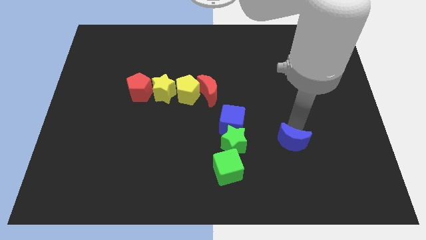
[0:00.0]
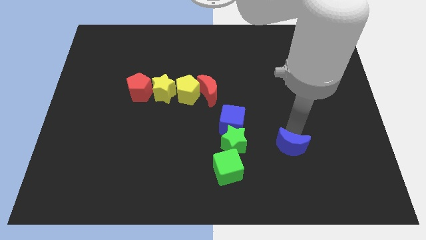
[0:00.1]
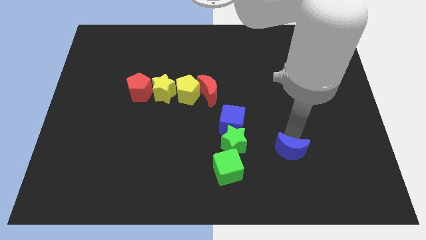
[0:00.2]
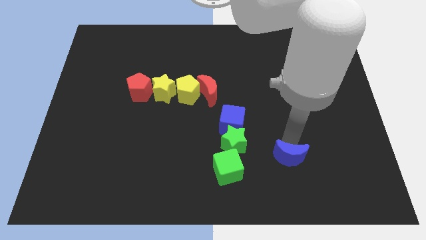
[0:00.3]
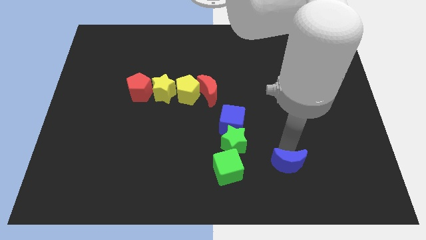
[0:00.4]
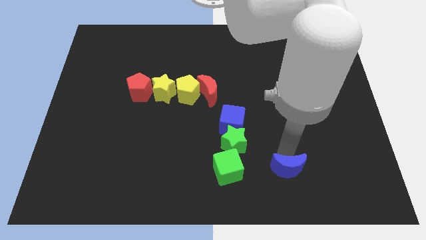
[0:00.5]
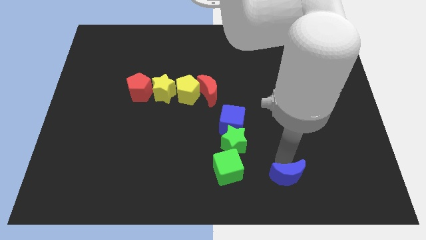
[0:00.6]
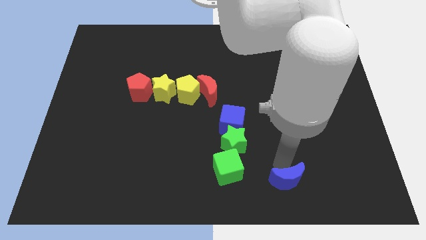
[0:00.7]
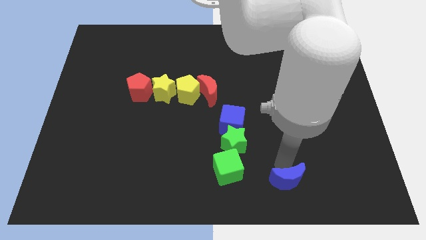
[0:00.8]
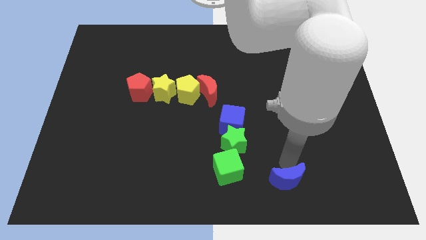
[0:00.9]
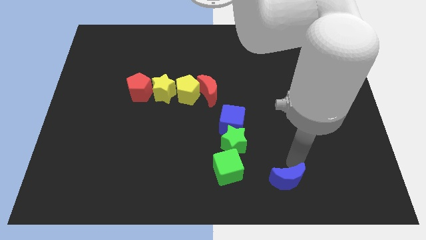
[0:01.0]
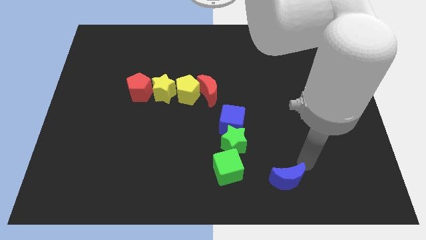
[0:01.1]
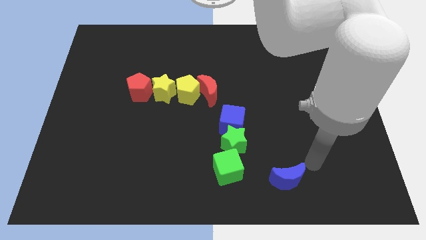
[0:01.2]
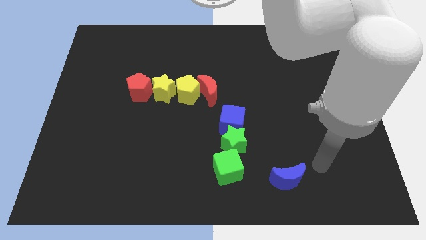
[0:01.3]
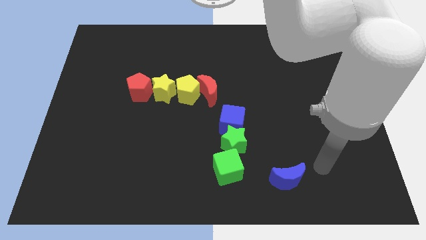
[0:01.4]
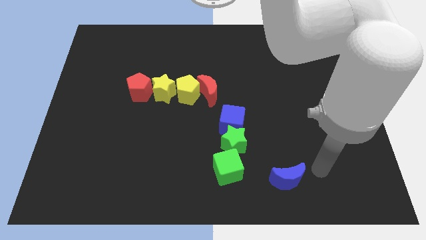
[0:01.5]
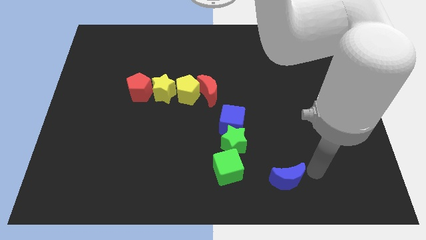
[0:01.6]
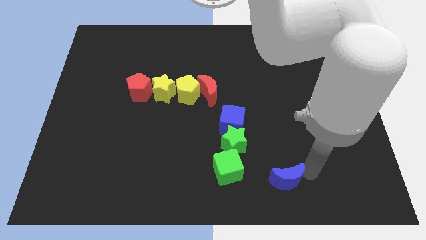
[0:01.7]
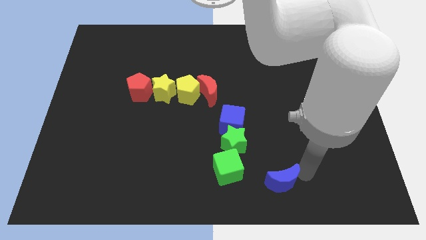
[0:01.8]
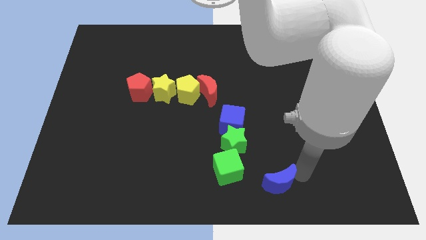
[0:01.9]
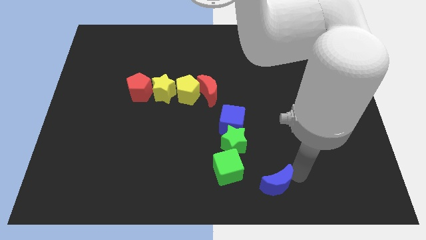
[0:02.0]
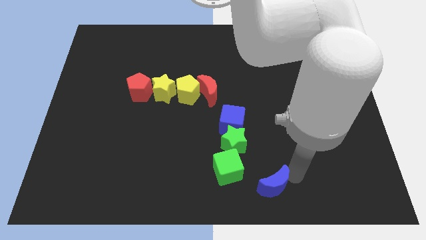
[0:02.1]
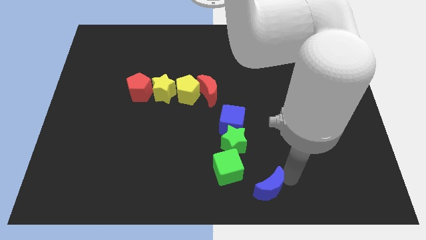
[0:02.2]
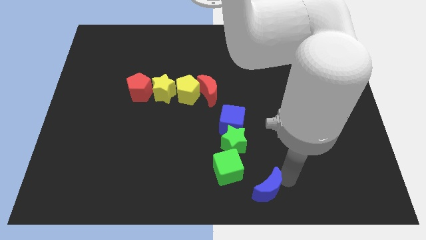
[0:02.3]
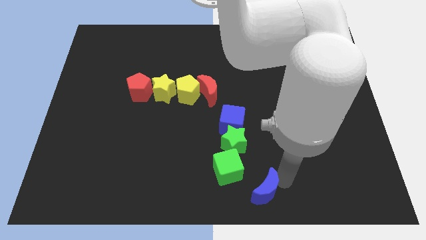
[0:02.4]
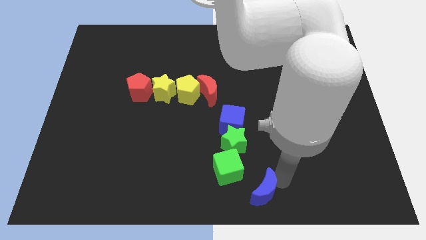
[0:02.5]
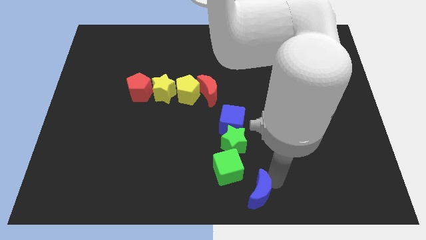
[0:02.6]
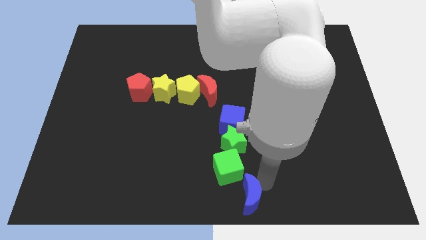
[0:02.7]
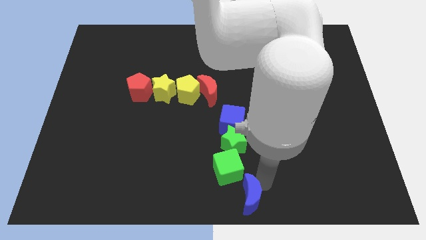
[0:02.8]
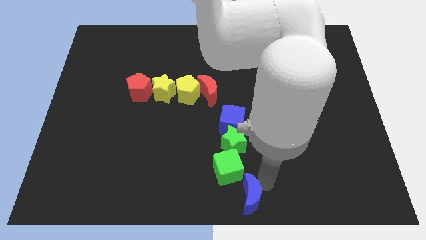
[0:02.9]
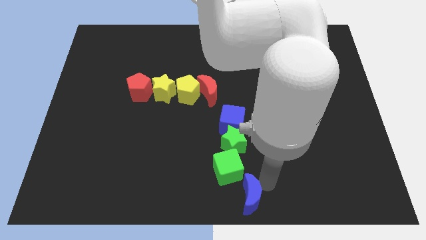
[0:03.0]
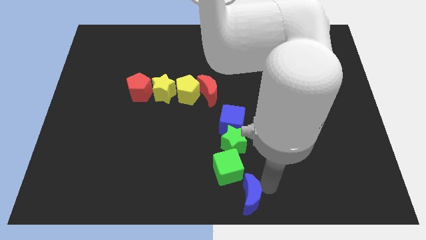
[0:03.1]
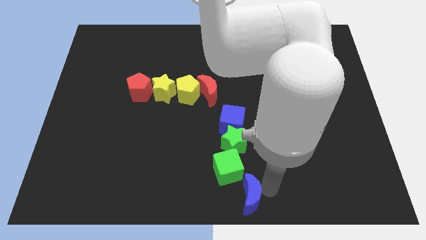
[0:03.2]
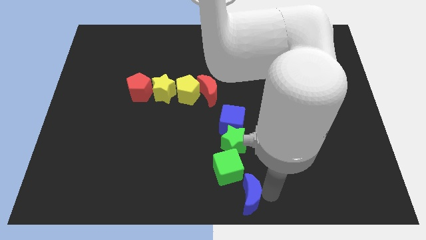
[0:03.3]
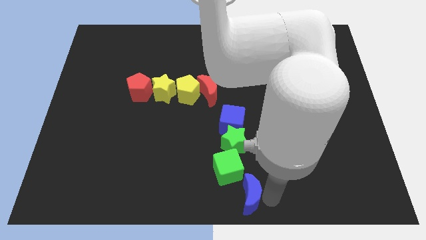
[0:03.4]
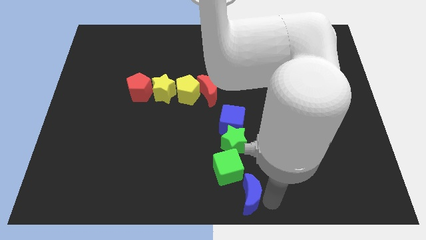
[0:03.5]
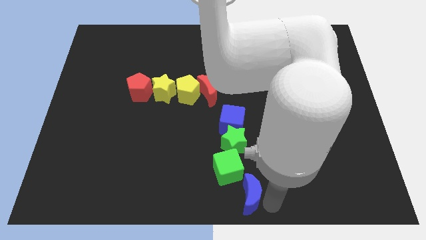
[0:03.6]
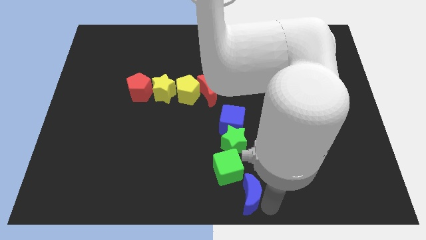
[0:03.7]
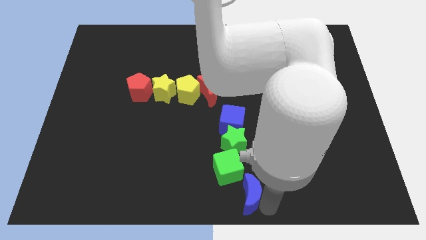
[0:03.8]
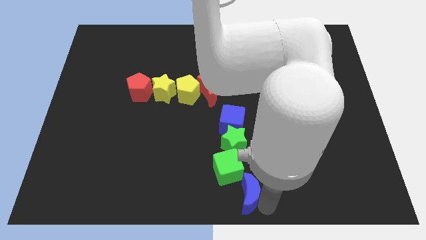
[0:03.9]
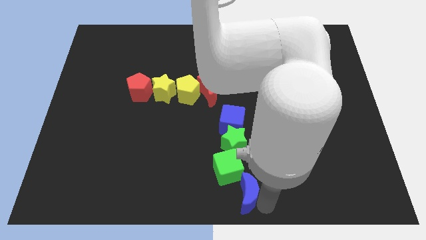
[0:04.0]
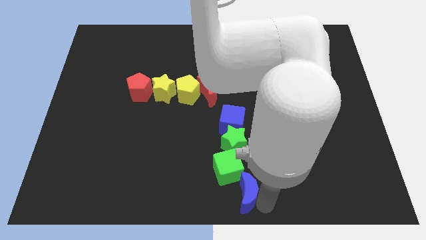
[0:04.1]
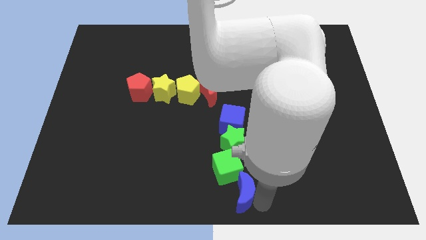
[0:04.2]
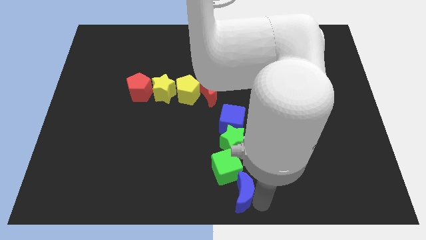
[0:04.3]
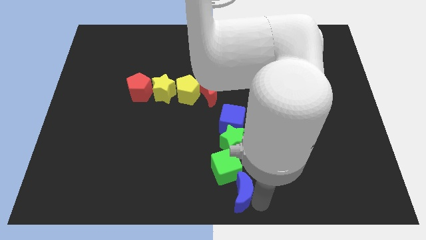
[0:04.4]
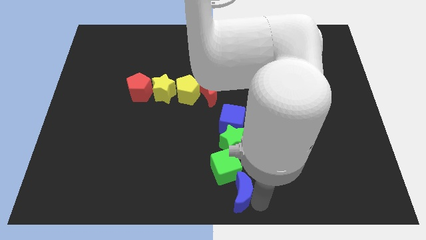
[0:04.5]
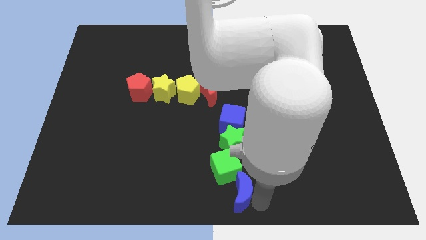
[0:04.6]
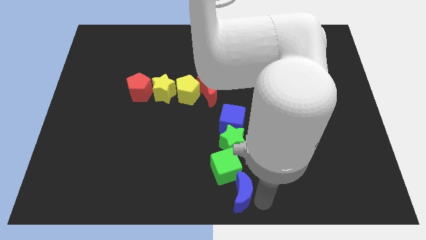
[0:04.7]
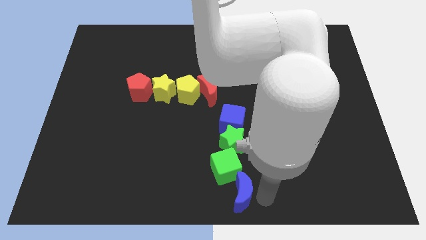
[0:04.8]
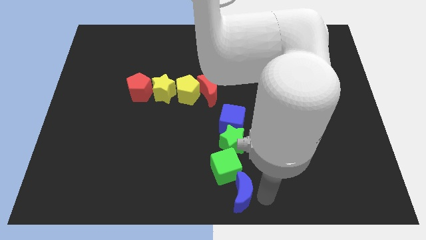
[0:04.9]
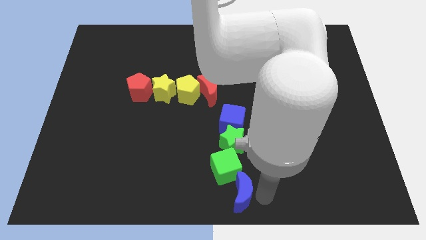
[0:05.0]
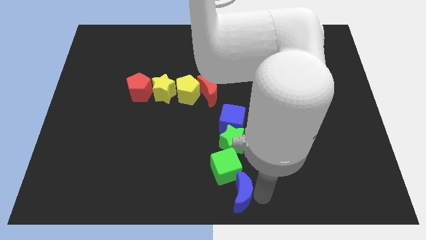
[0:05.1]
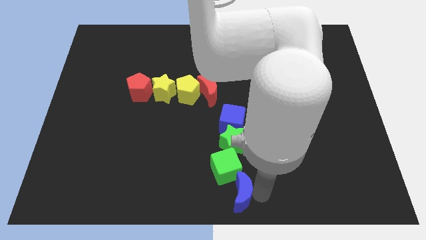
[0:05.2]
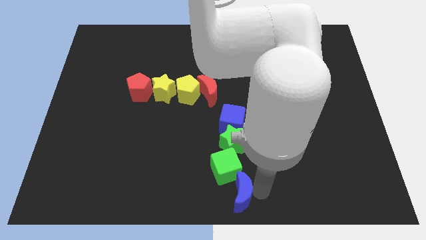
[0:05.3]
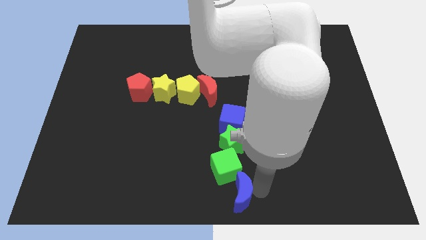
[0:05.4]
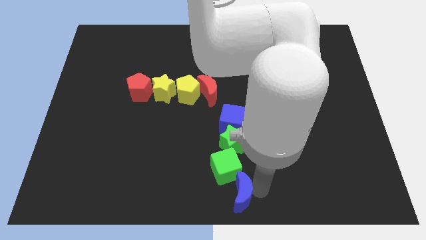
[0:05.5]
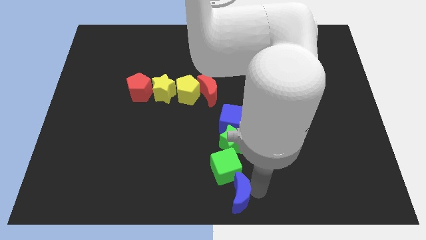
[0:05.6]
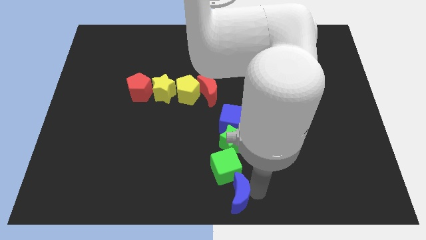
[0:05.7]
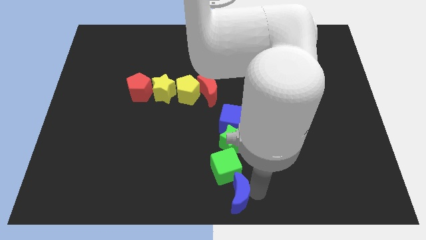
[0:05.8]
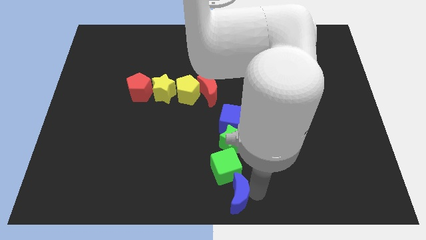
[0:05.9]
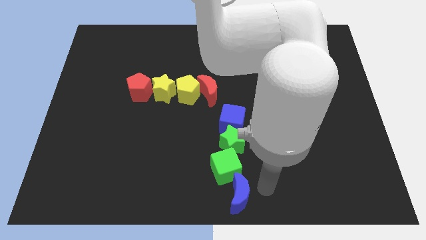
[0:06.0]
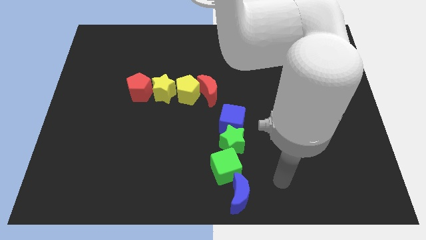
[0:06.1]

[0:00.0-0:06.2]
move blue crescent right bottom of the green cube

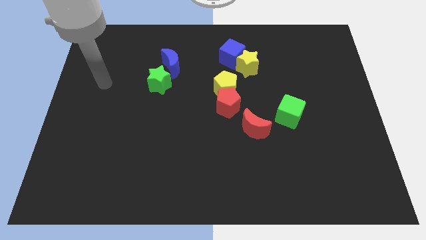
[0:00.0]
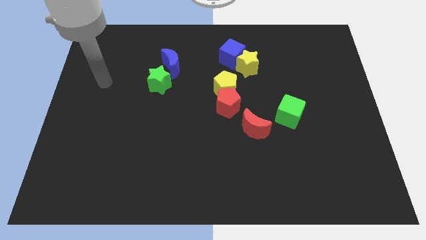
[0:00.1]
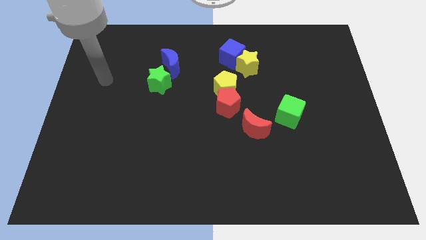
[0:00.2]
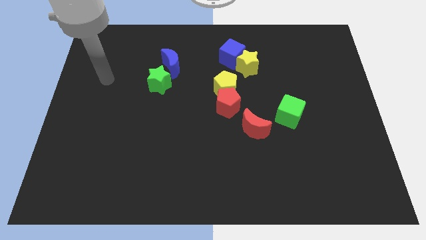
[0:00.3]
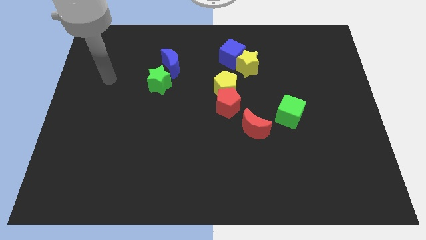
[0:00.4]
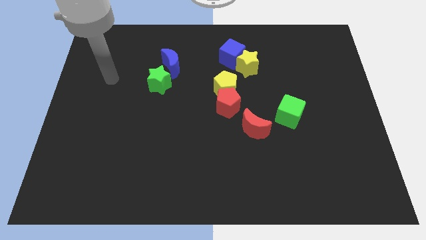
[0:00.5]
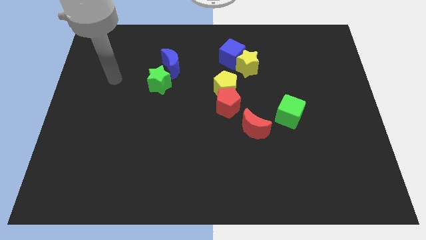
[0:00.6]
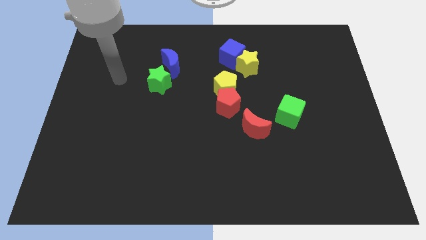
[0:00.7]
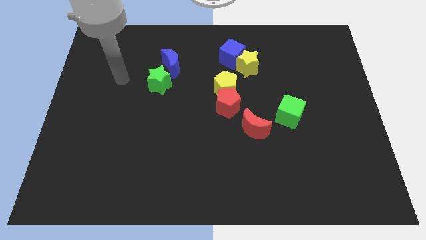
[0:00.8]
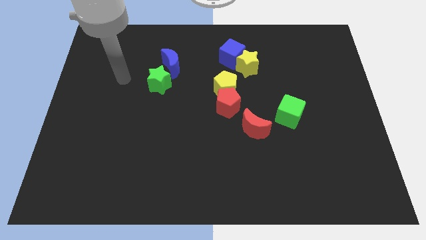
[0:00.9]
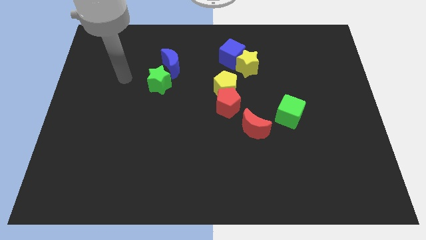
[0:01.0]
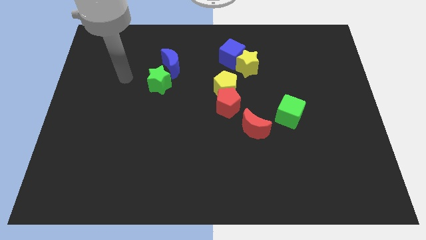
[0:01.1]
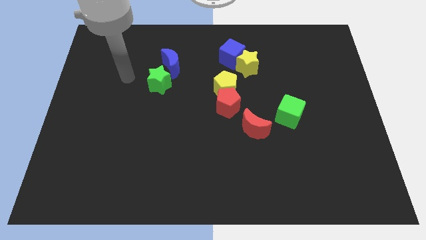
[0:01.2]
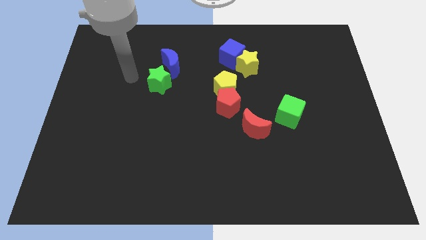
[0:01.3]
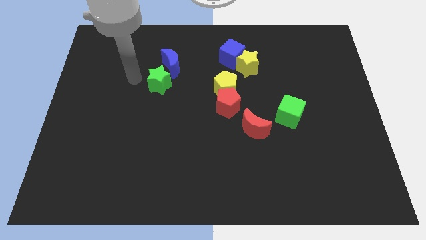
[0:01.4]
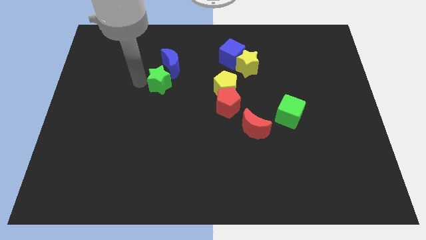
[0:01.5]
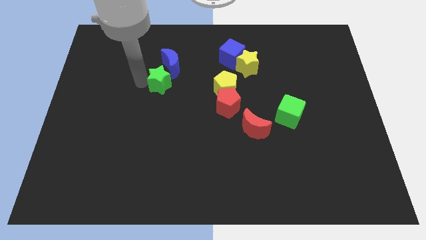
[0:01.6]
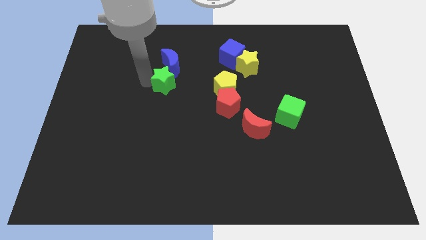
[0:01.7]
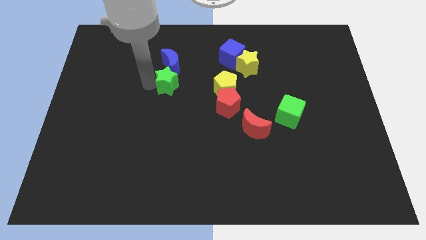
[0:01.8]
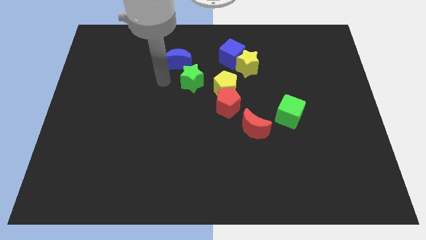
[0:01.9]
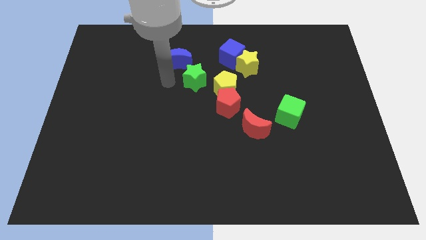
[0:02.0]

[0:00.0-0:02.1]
push the green star into the blue moon

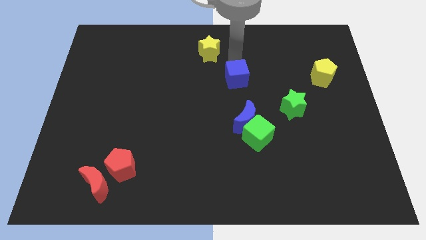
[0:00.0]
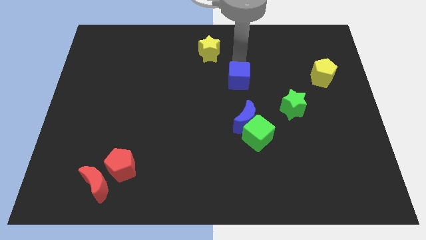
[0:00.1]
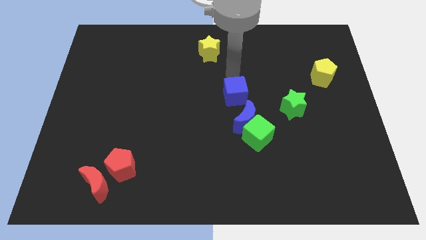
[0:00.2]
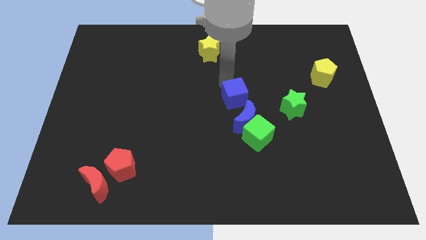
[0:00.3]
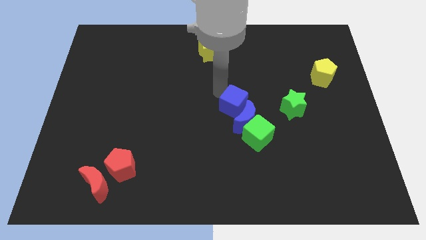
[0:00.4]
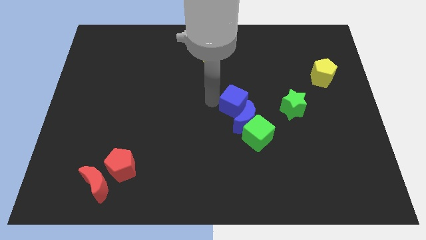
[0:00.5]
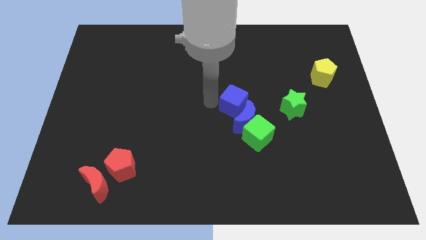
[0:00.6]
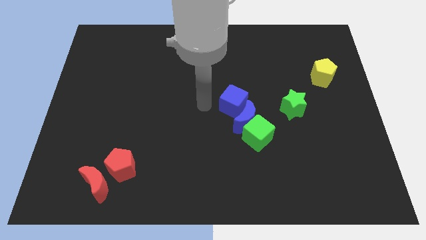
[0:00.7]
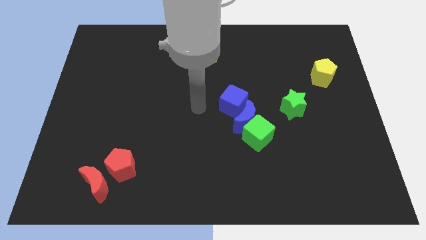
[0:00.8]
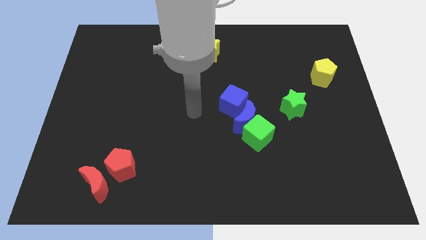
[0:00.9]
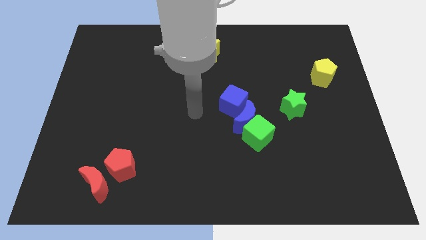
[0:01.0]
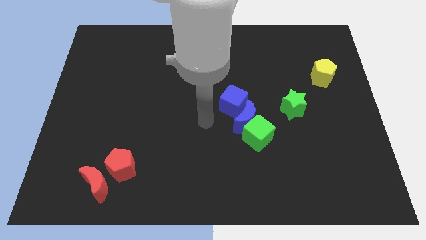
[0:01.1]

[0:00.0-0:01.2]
move the blue cube into the blue crescent
